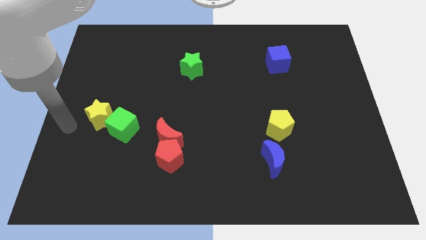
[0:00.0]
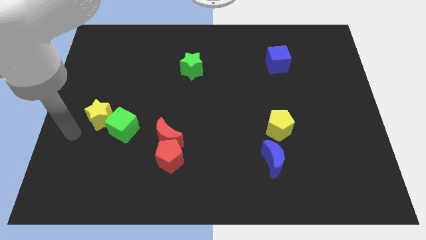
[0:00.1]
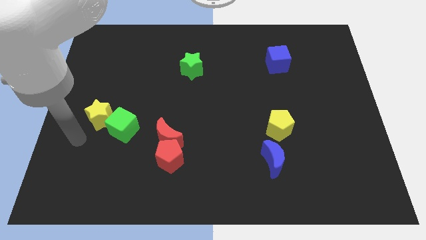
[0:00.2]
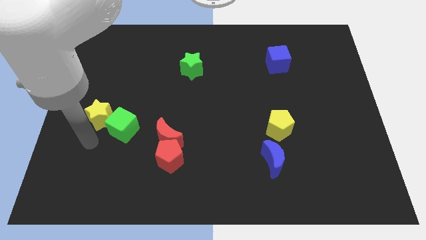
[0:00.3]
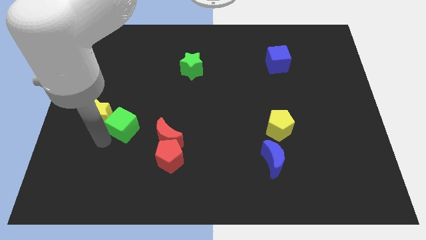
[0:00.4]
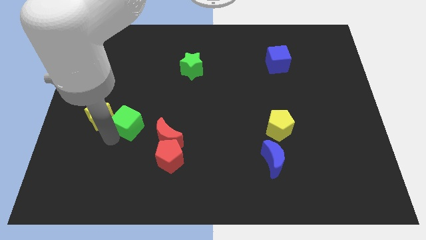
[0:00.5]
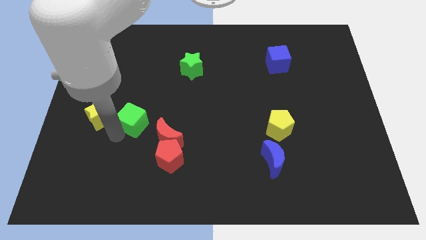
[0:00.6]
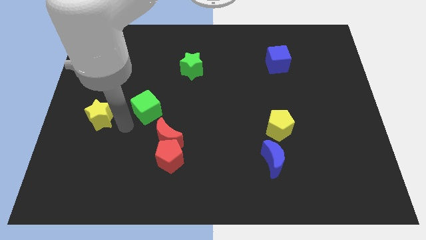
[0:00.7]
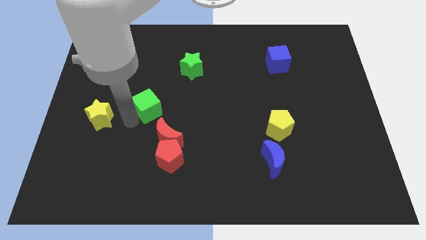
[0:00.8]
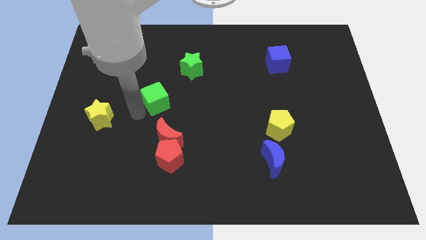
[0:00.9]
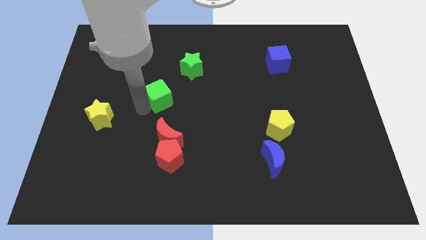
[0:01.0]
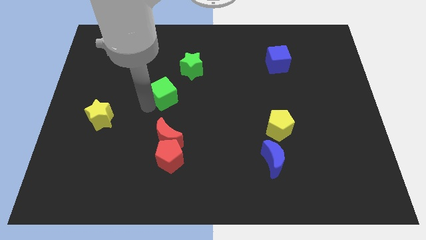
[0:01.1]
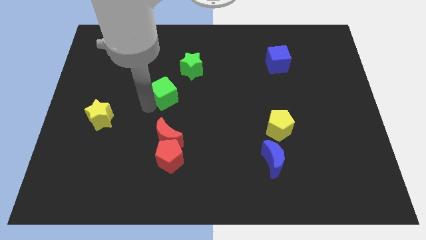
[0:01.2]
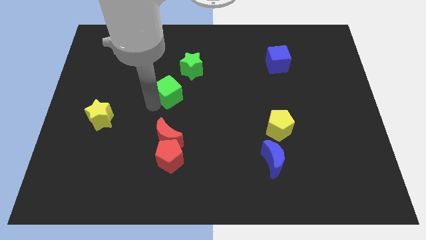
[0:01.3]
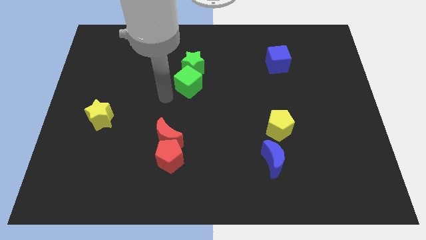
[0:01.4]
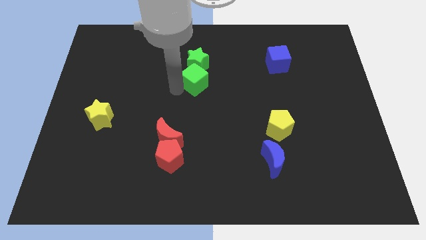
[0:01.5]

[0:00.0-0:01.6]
slide the green cube into the green star

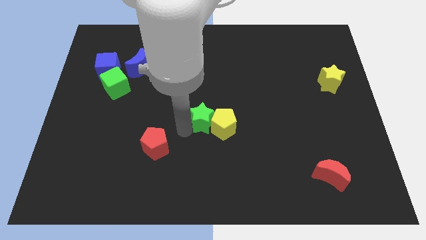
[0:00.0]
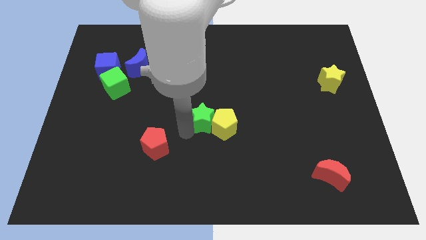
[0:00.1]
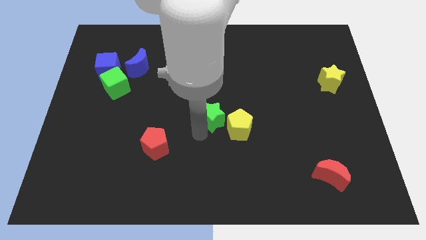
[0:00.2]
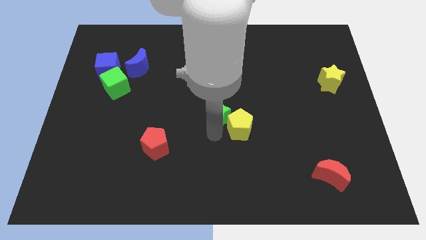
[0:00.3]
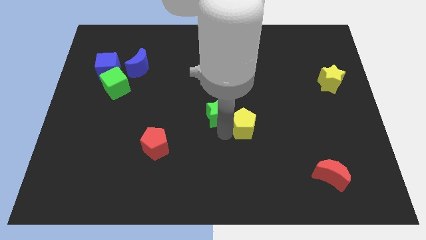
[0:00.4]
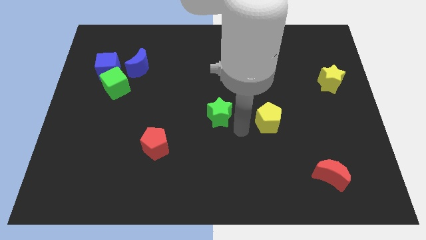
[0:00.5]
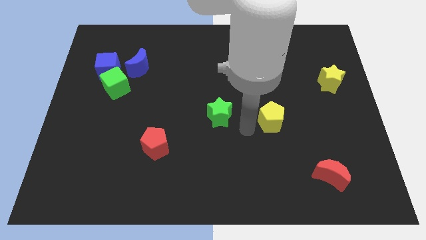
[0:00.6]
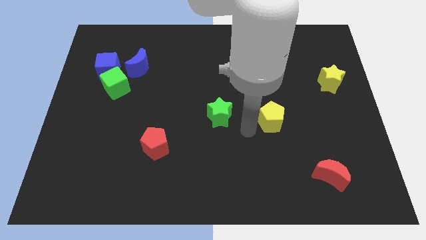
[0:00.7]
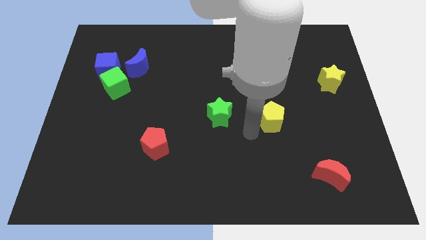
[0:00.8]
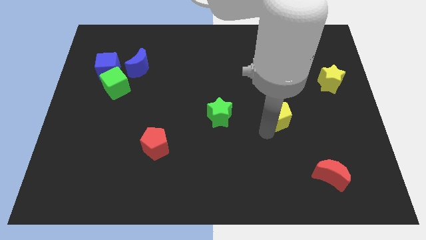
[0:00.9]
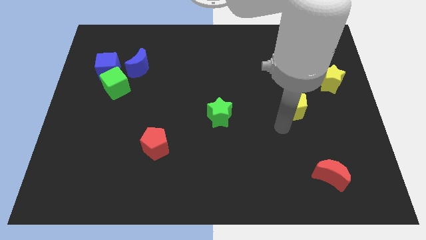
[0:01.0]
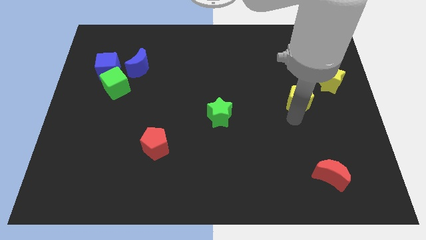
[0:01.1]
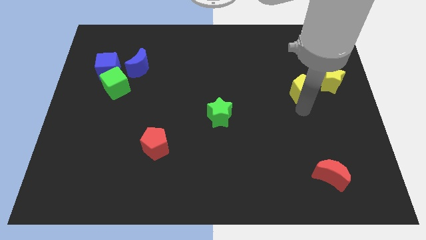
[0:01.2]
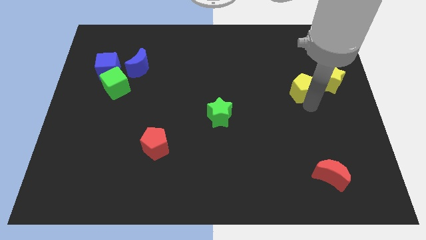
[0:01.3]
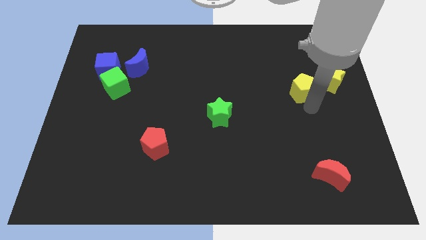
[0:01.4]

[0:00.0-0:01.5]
push the yellow pentagon to the left of the yellow star

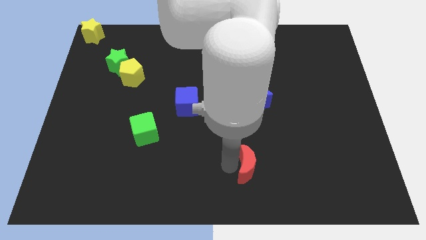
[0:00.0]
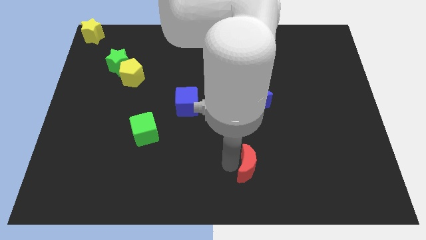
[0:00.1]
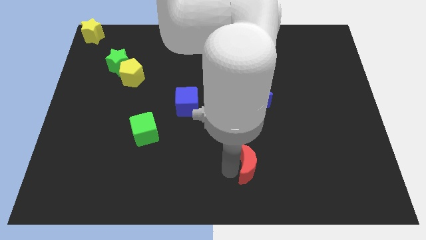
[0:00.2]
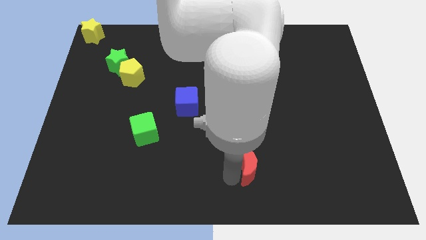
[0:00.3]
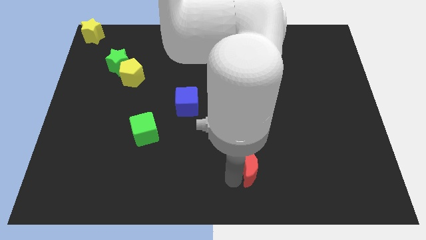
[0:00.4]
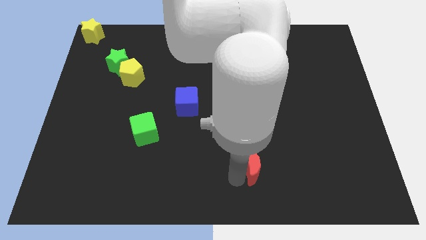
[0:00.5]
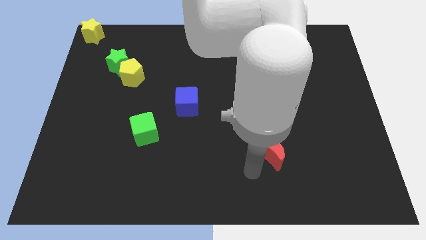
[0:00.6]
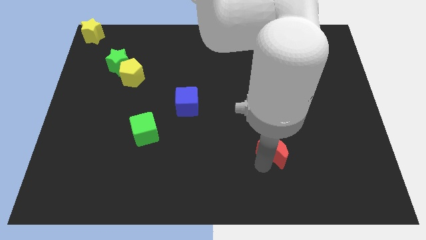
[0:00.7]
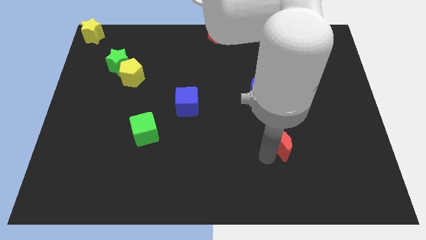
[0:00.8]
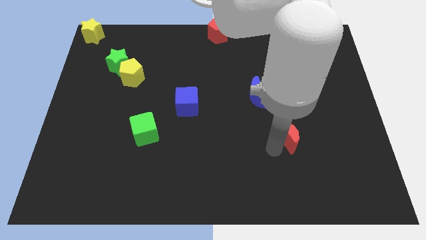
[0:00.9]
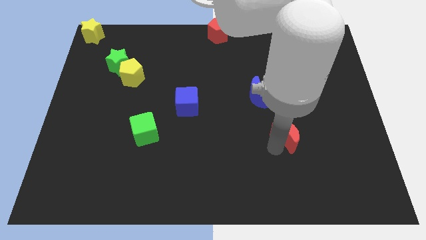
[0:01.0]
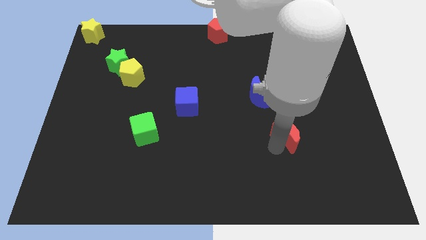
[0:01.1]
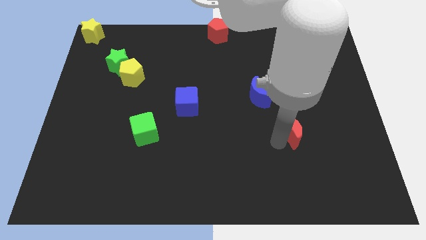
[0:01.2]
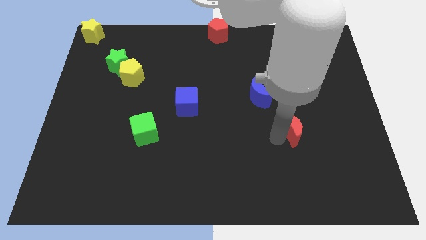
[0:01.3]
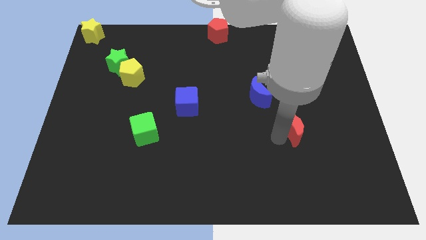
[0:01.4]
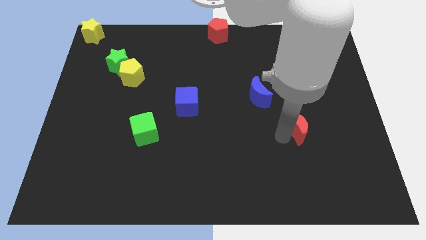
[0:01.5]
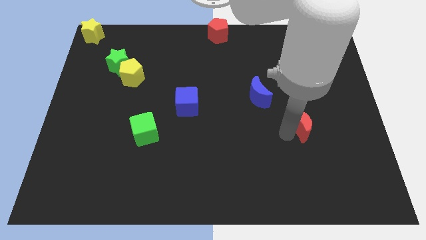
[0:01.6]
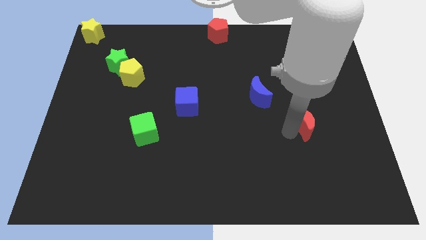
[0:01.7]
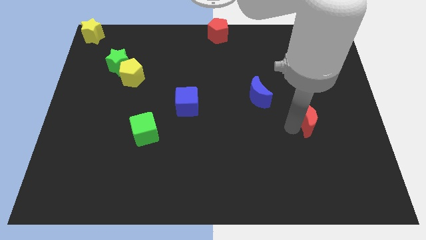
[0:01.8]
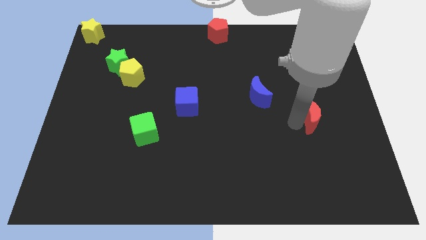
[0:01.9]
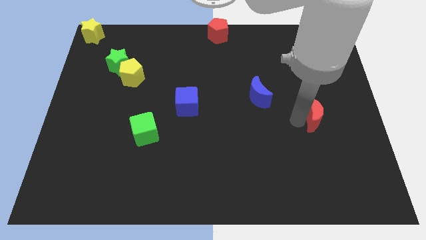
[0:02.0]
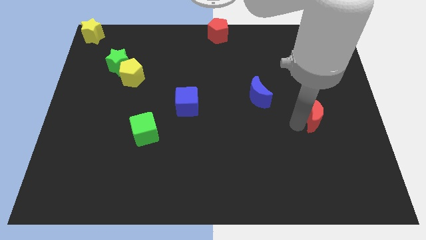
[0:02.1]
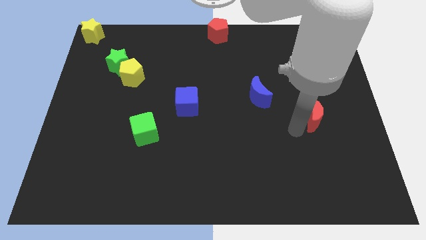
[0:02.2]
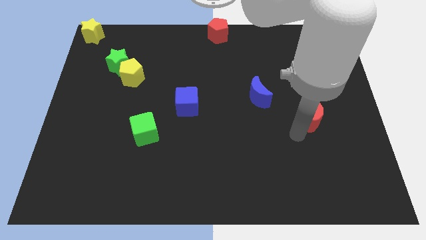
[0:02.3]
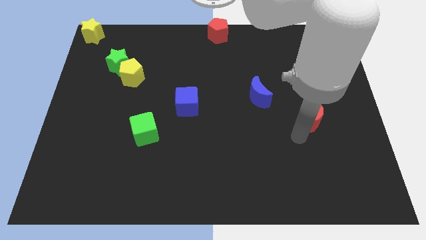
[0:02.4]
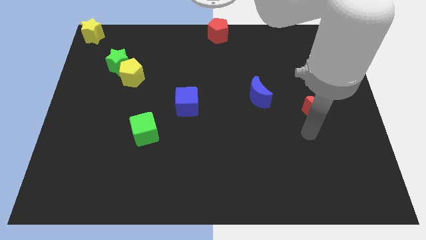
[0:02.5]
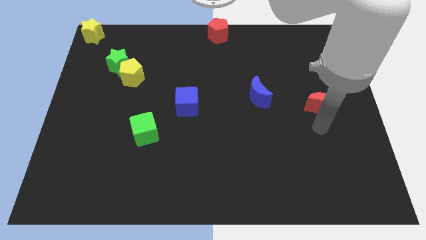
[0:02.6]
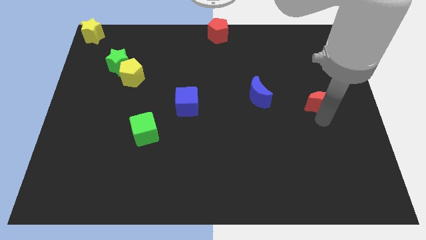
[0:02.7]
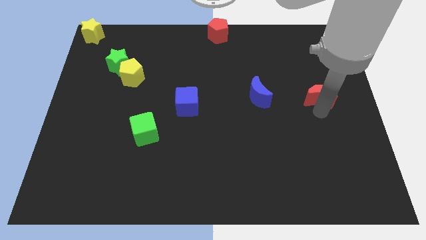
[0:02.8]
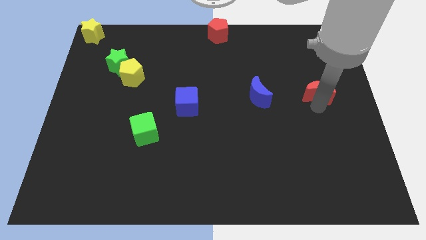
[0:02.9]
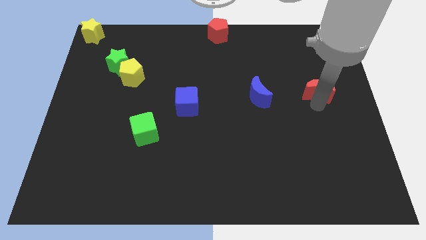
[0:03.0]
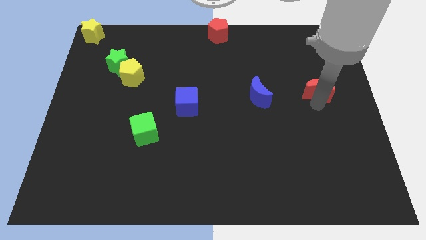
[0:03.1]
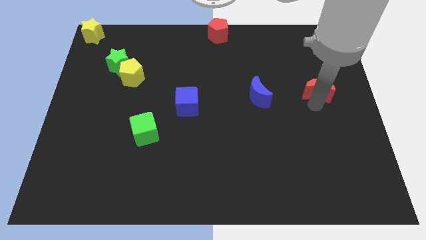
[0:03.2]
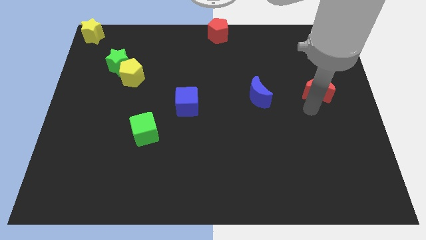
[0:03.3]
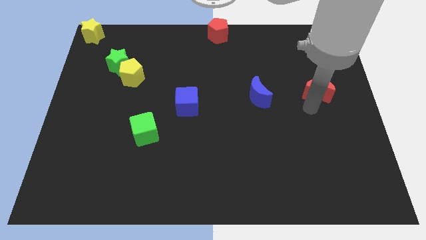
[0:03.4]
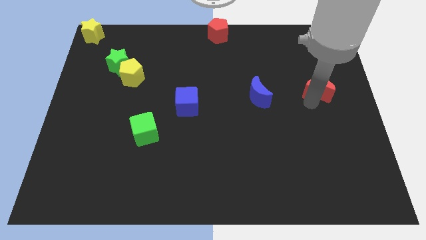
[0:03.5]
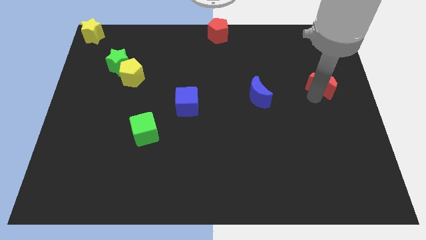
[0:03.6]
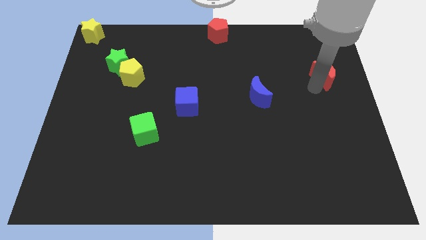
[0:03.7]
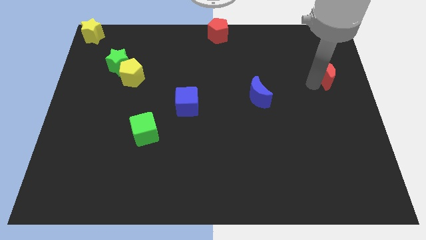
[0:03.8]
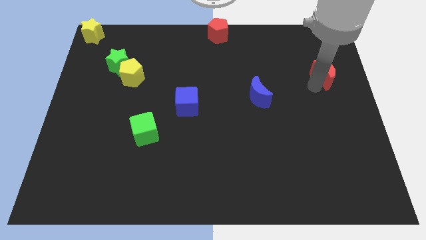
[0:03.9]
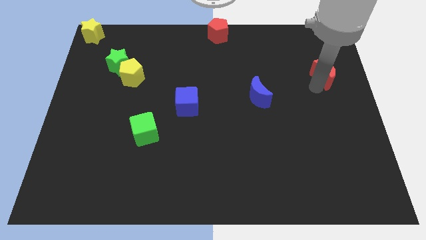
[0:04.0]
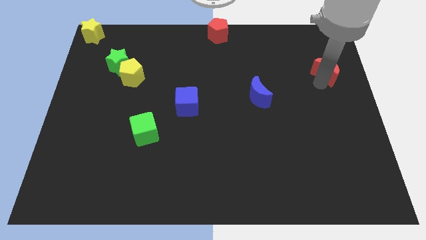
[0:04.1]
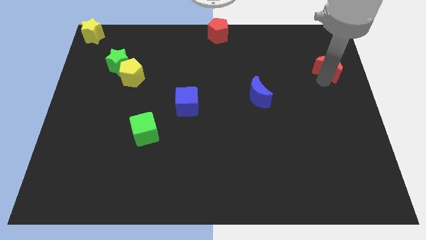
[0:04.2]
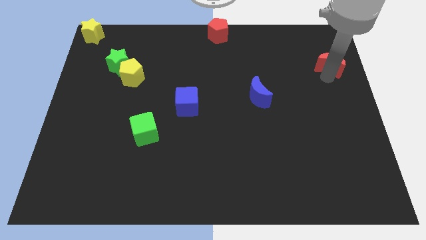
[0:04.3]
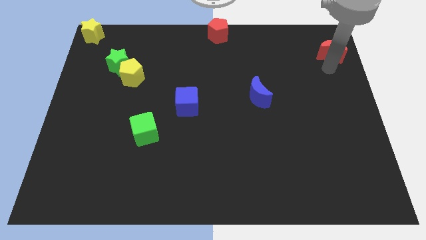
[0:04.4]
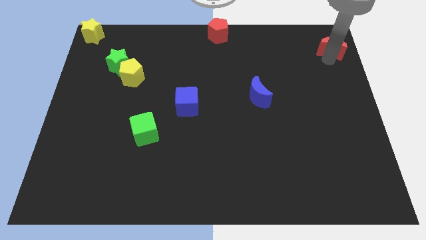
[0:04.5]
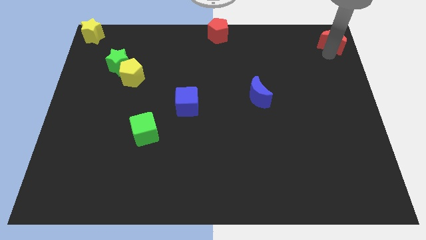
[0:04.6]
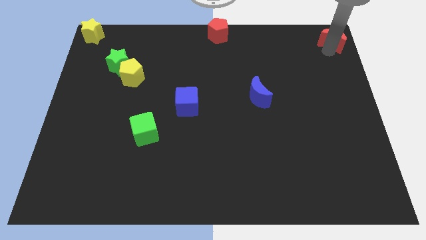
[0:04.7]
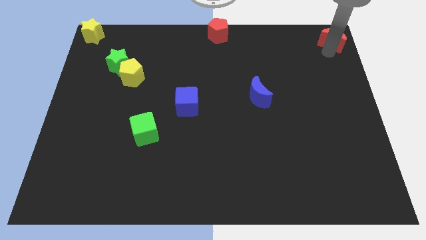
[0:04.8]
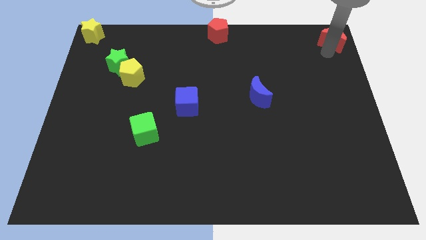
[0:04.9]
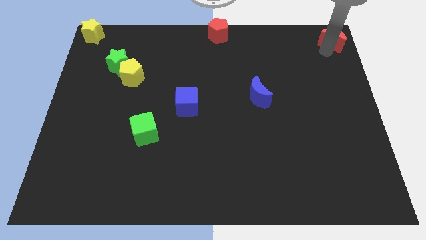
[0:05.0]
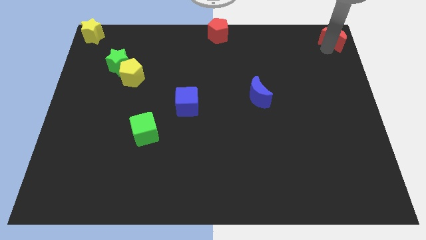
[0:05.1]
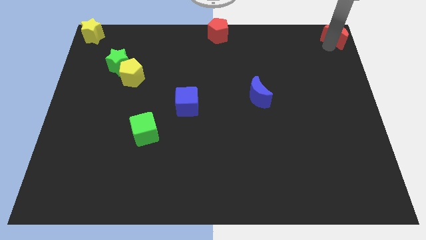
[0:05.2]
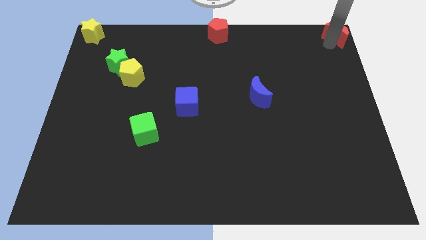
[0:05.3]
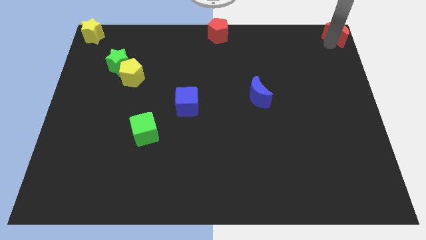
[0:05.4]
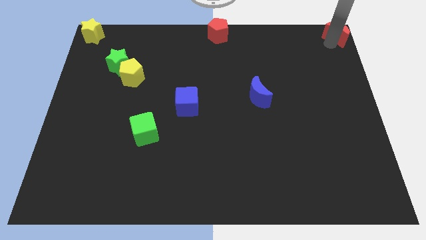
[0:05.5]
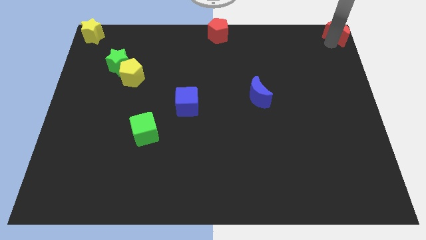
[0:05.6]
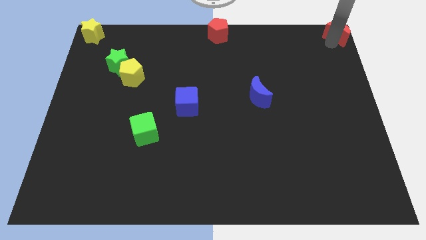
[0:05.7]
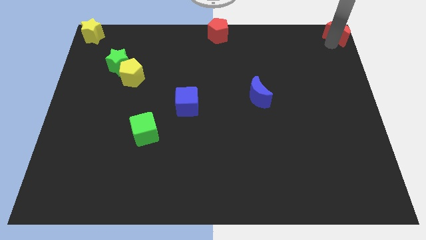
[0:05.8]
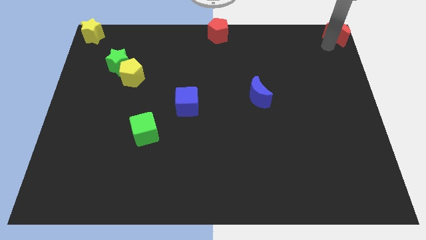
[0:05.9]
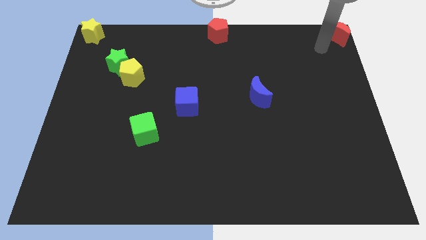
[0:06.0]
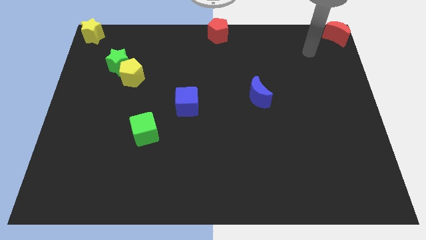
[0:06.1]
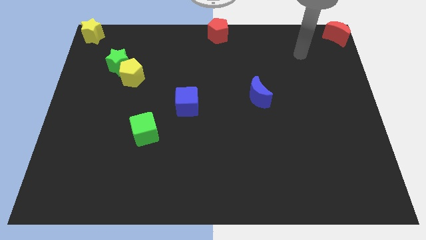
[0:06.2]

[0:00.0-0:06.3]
move the red crescent towards the top right corner of the board
